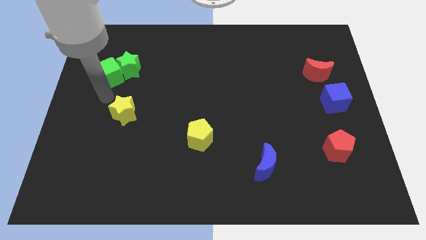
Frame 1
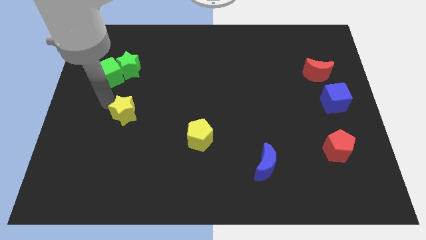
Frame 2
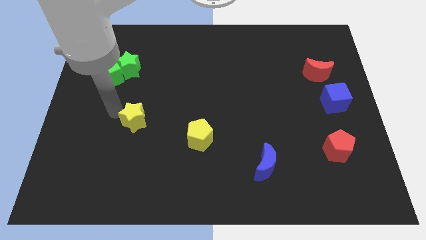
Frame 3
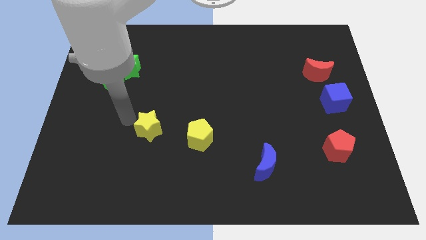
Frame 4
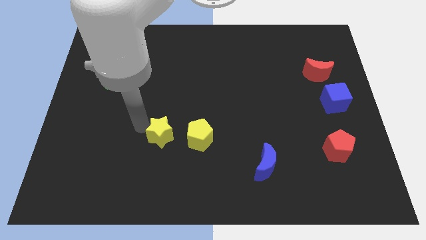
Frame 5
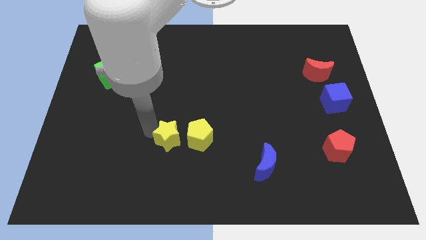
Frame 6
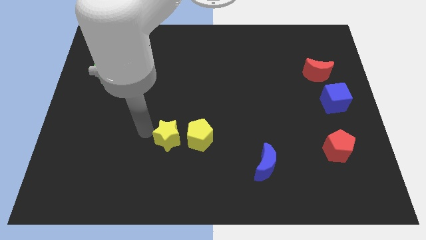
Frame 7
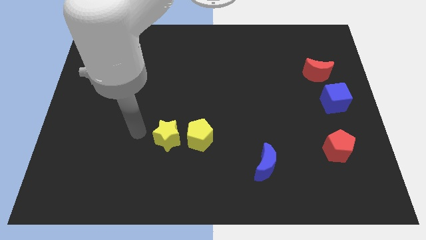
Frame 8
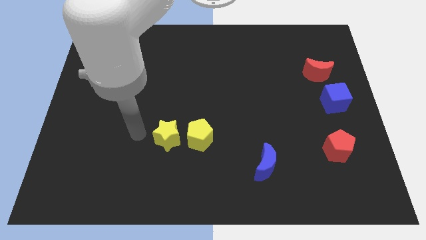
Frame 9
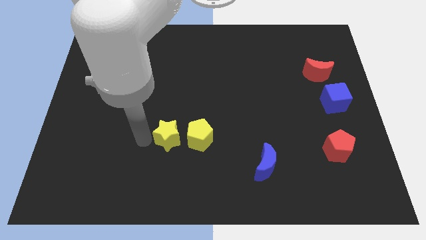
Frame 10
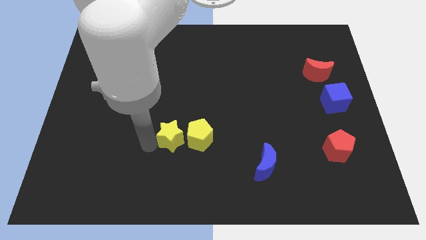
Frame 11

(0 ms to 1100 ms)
move the yellow star close to the left of the yellow pentagon

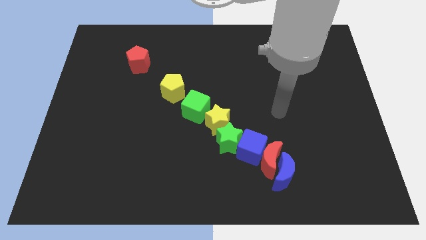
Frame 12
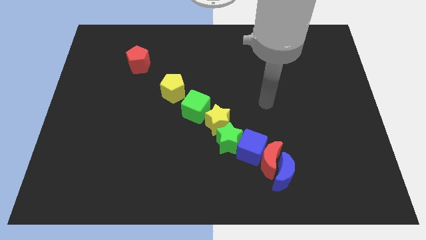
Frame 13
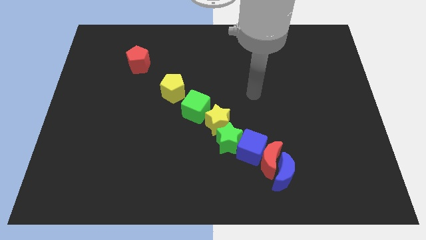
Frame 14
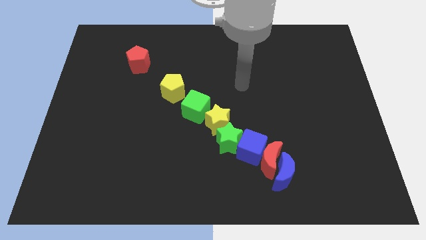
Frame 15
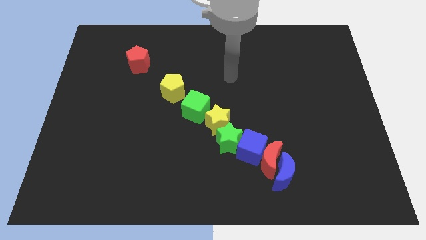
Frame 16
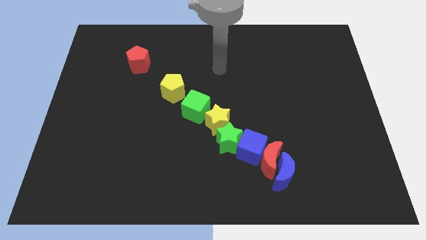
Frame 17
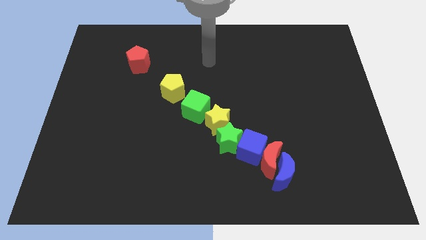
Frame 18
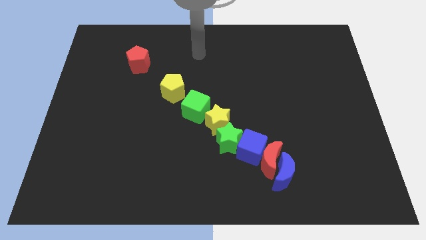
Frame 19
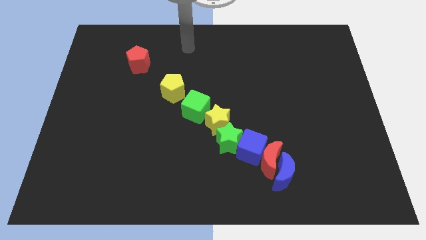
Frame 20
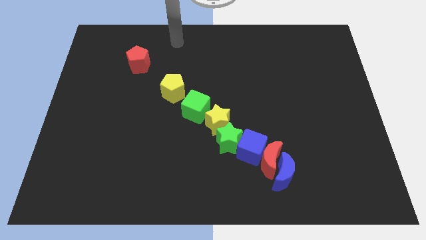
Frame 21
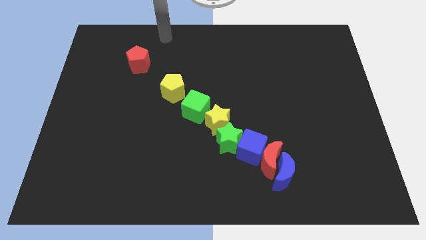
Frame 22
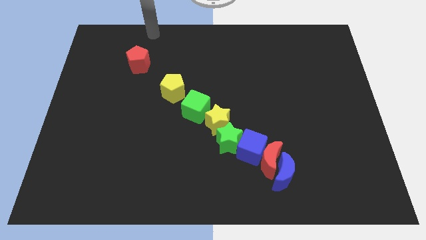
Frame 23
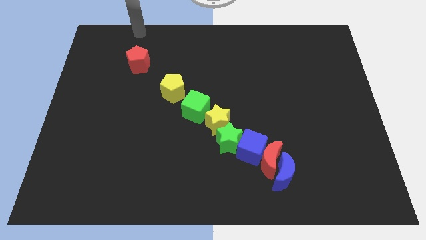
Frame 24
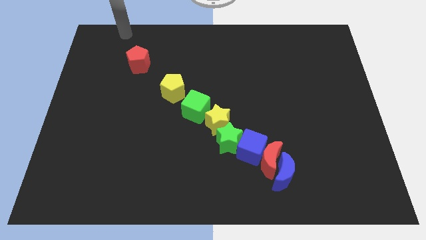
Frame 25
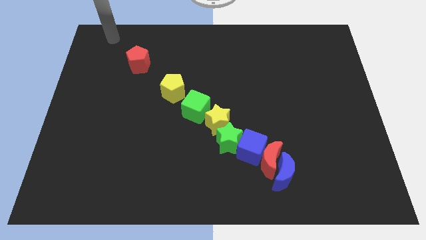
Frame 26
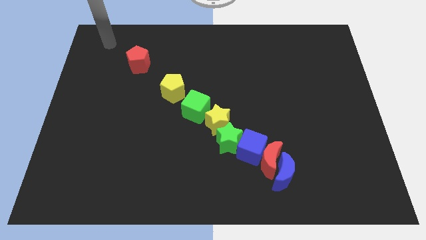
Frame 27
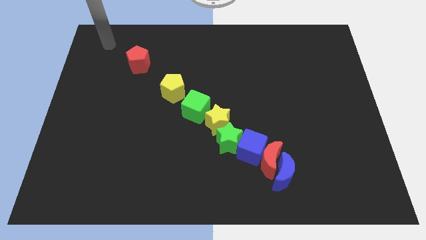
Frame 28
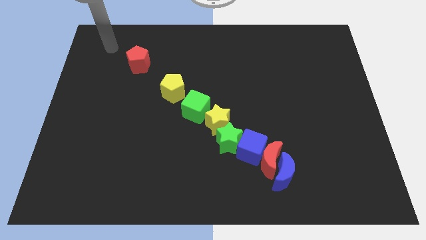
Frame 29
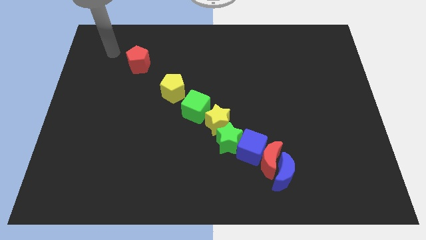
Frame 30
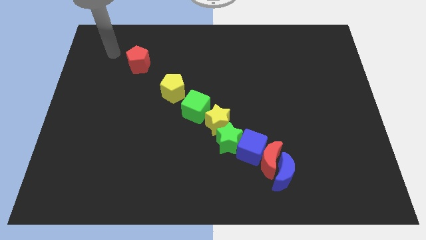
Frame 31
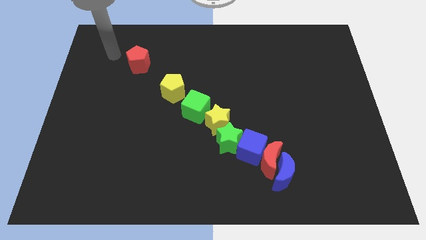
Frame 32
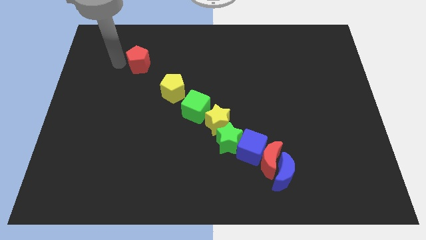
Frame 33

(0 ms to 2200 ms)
move your arm close to the red pentagon

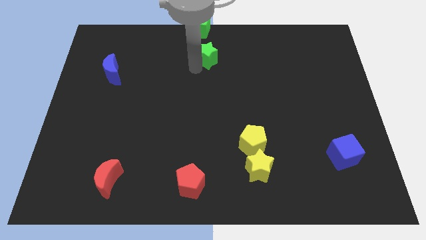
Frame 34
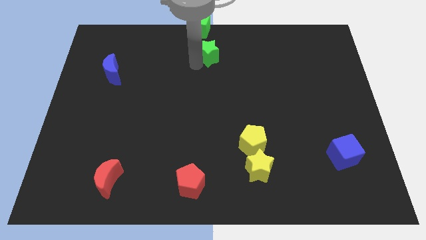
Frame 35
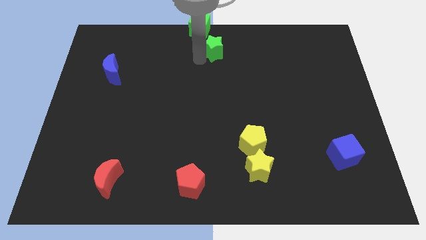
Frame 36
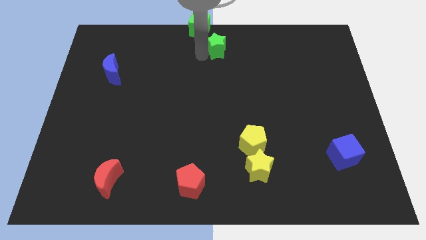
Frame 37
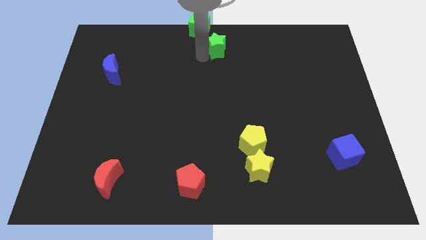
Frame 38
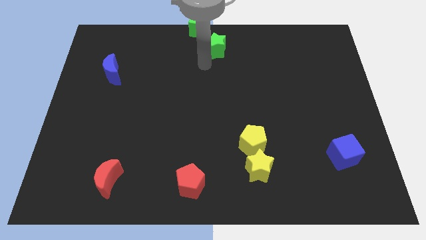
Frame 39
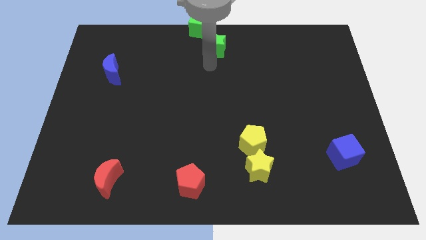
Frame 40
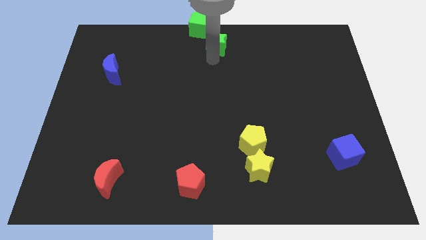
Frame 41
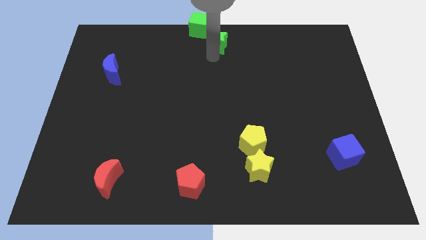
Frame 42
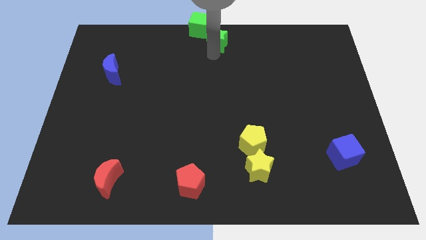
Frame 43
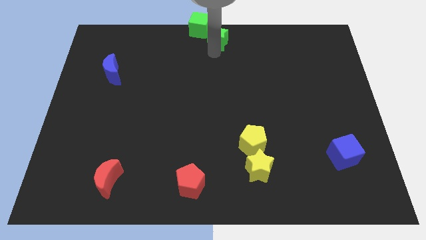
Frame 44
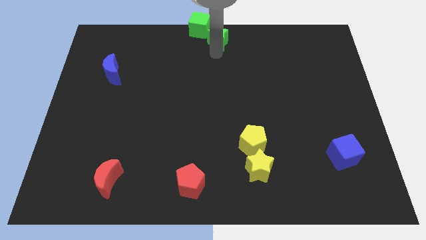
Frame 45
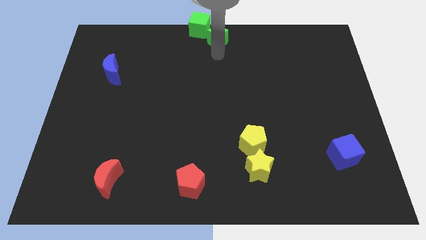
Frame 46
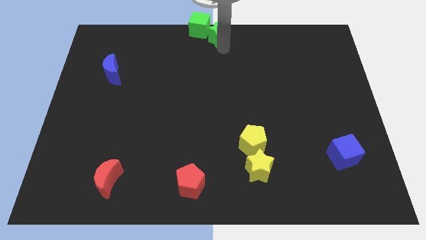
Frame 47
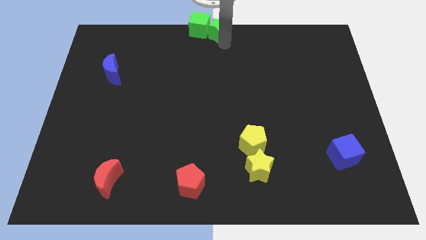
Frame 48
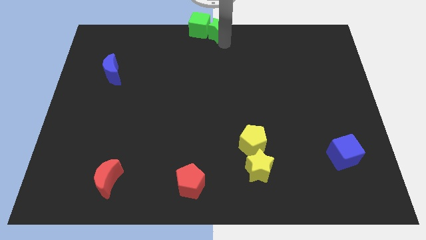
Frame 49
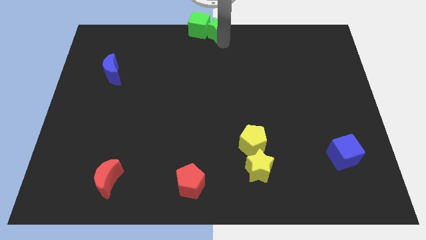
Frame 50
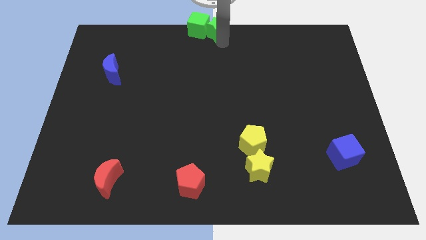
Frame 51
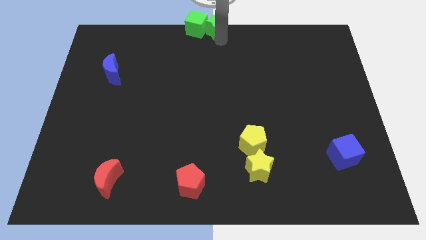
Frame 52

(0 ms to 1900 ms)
move the green star into the top center of the board

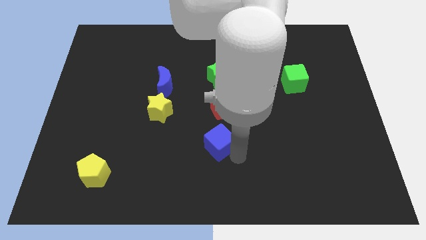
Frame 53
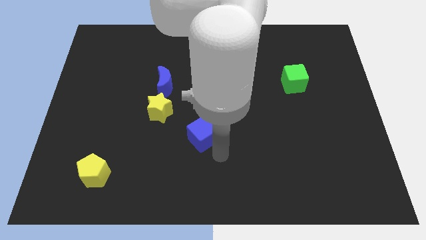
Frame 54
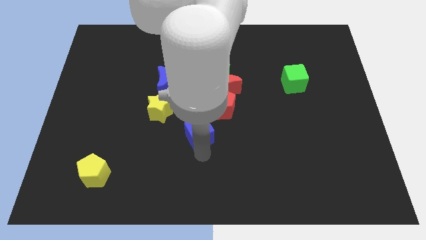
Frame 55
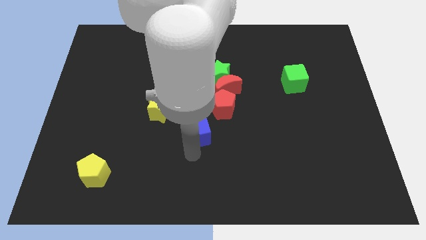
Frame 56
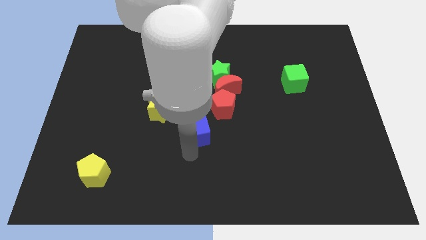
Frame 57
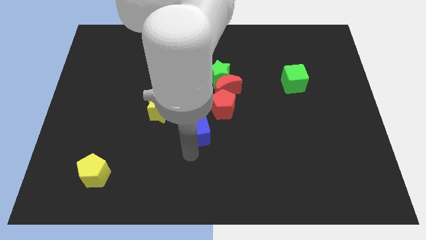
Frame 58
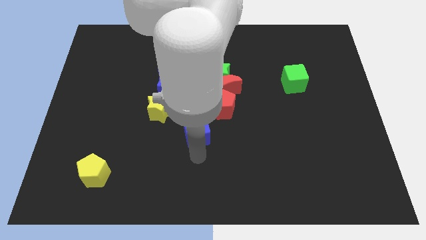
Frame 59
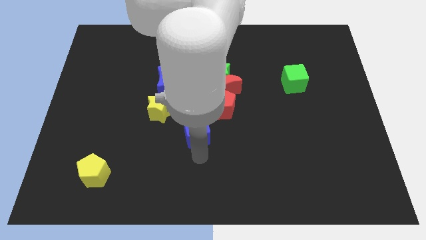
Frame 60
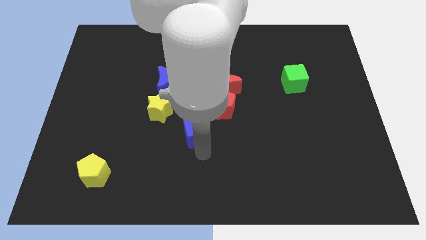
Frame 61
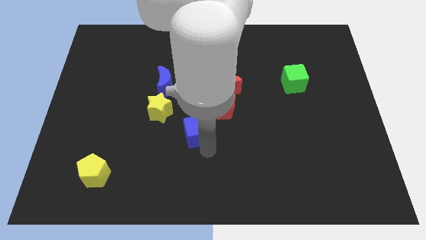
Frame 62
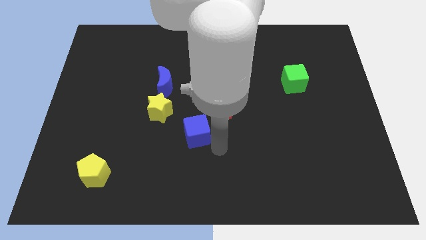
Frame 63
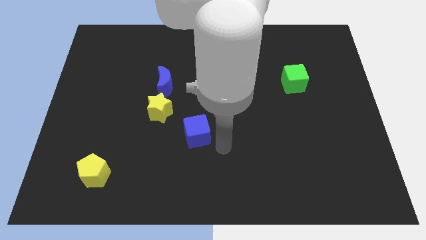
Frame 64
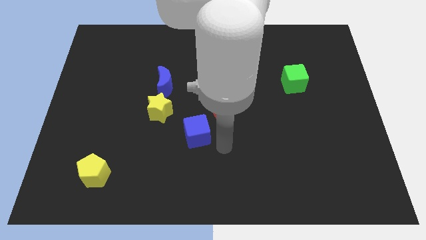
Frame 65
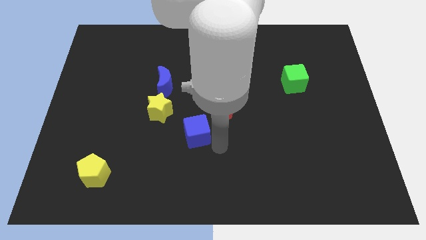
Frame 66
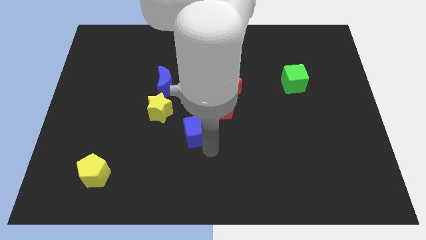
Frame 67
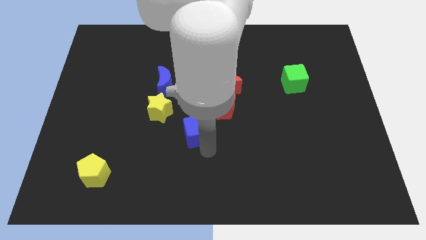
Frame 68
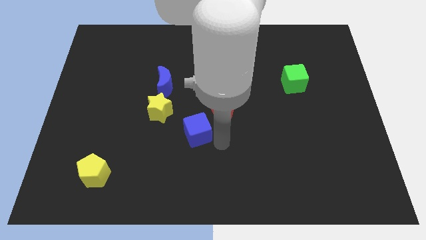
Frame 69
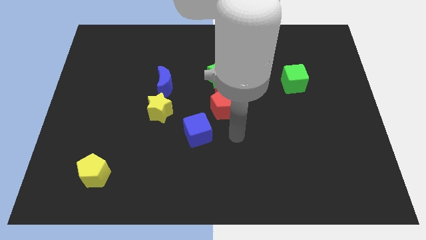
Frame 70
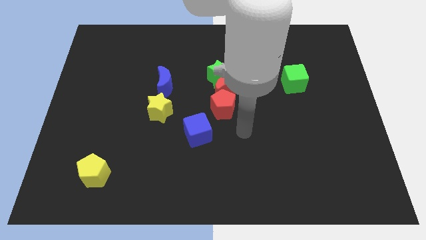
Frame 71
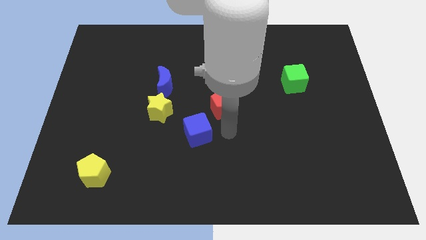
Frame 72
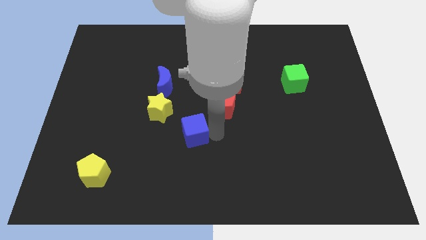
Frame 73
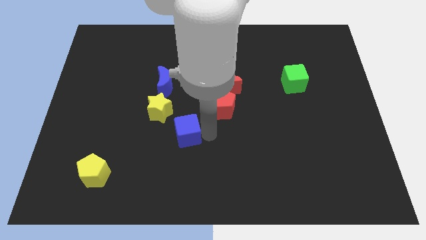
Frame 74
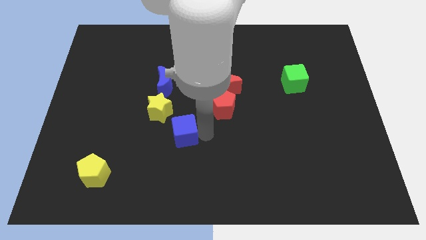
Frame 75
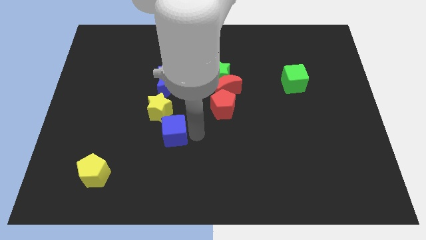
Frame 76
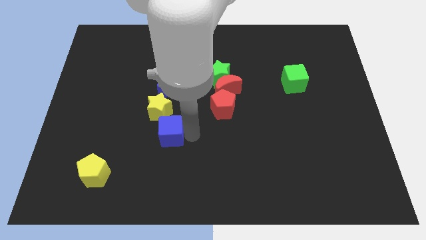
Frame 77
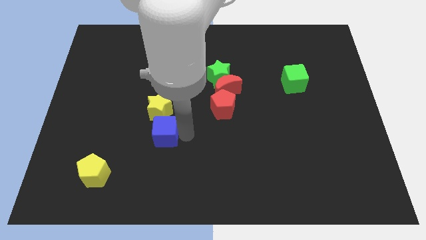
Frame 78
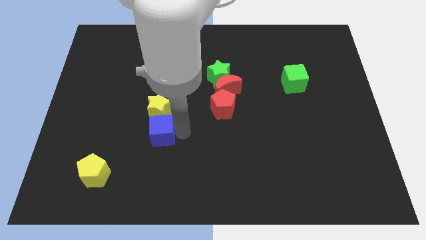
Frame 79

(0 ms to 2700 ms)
place blue cube to the bottom of yellow star

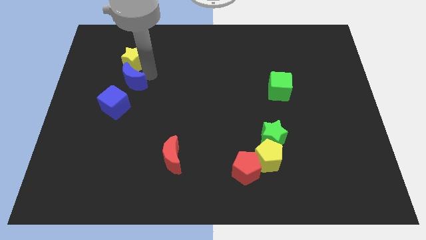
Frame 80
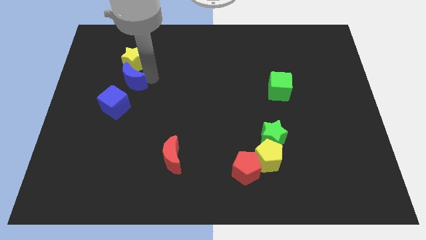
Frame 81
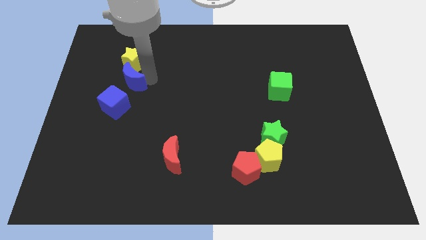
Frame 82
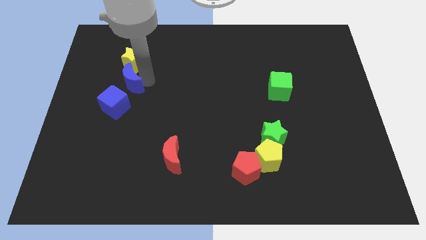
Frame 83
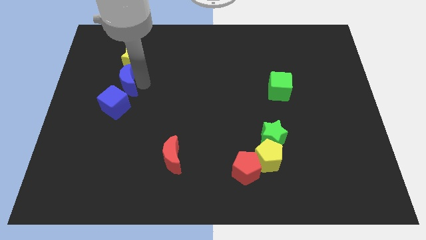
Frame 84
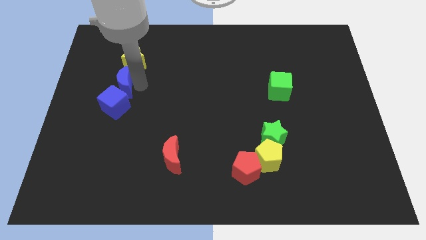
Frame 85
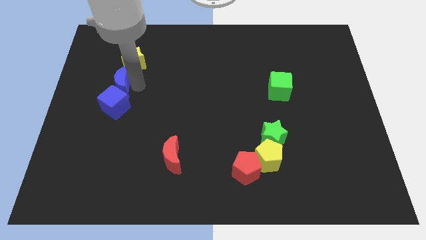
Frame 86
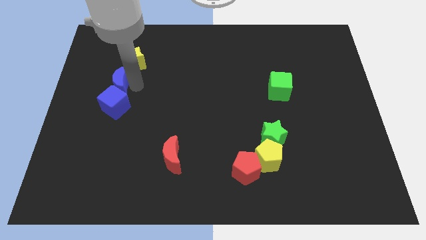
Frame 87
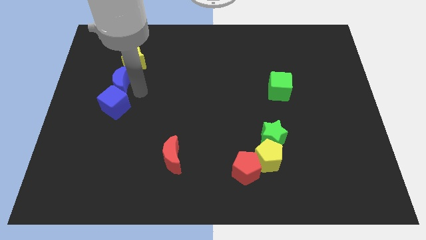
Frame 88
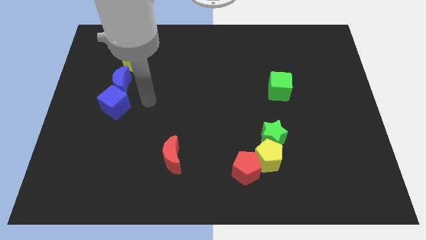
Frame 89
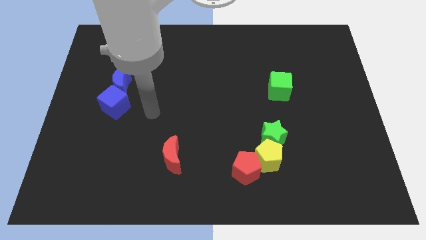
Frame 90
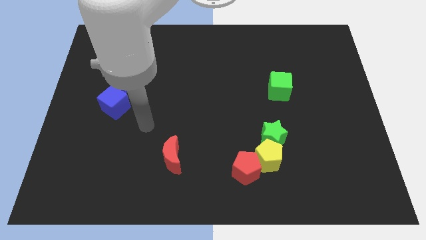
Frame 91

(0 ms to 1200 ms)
push the blue crescent slightly to the left
